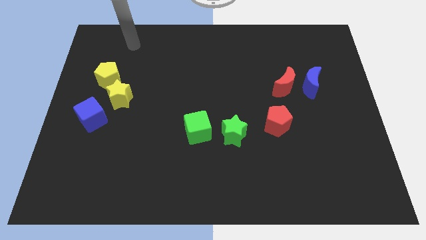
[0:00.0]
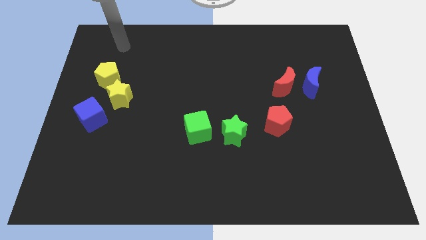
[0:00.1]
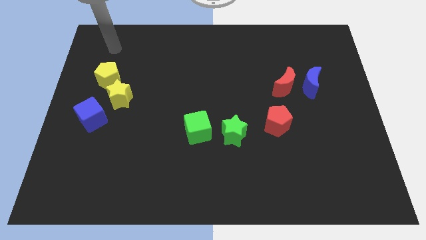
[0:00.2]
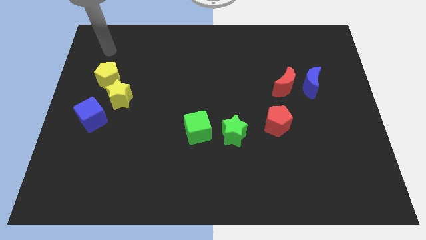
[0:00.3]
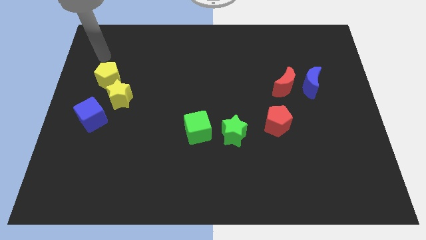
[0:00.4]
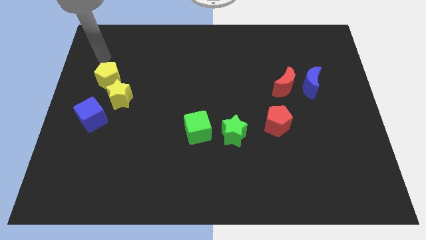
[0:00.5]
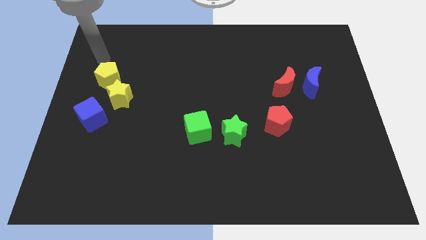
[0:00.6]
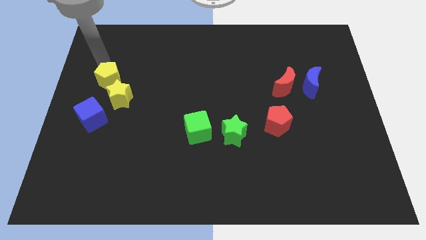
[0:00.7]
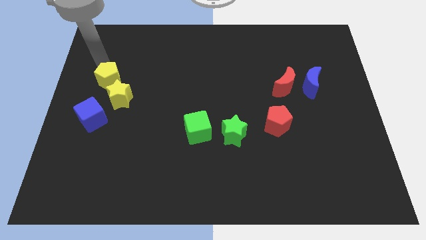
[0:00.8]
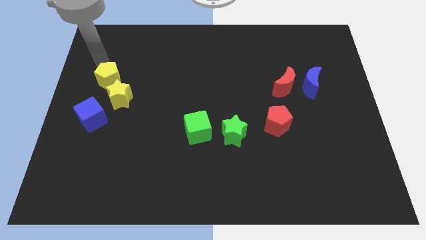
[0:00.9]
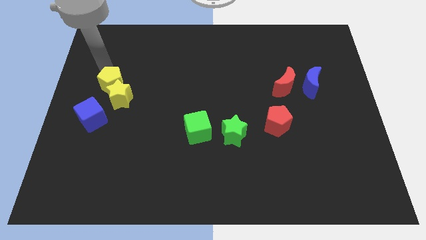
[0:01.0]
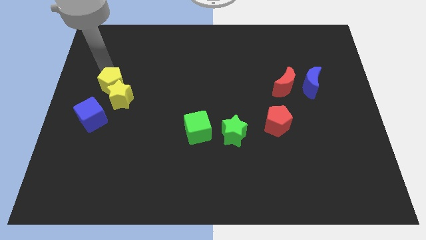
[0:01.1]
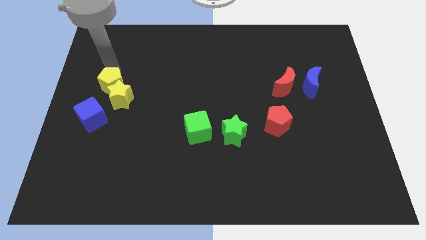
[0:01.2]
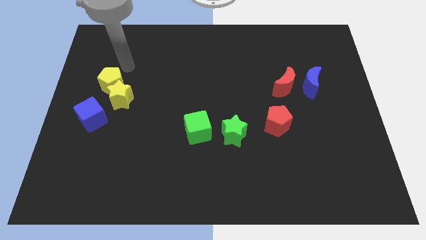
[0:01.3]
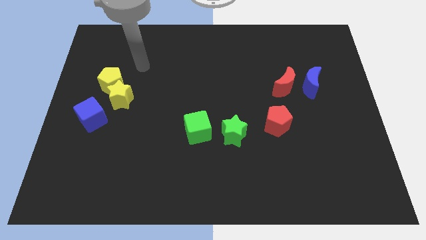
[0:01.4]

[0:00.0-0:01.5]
tap the yellow pentagon slightly downwards

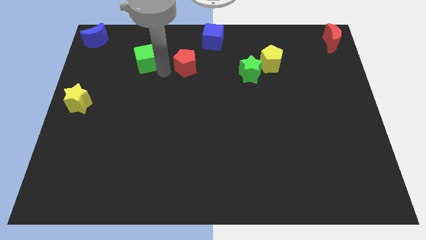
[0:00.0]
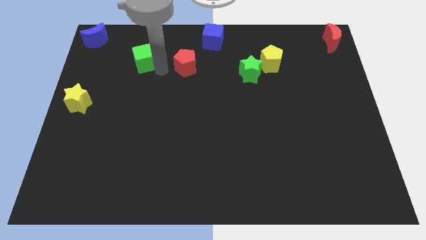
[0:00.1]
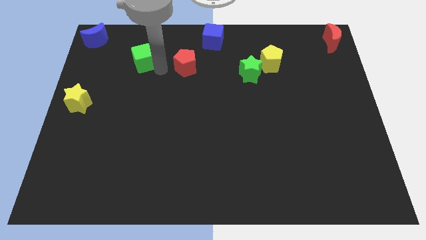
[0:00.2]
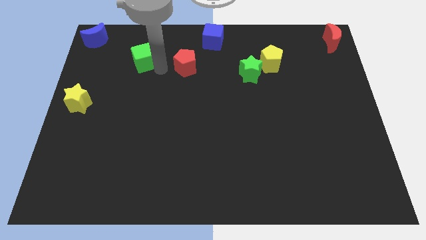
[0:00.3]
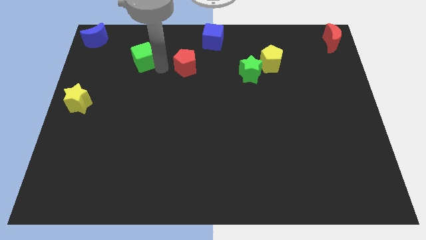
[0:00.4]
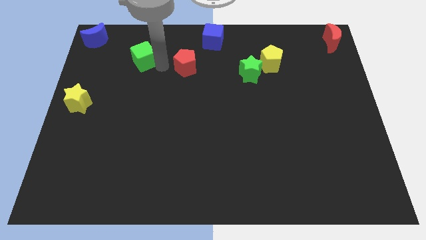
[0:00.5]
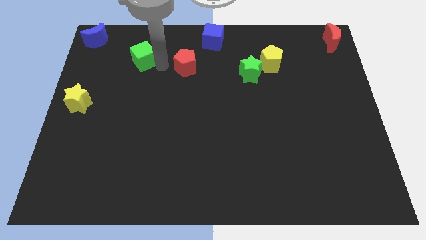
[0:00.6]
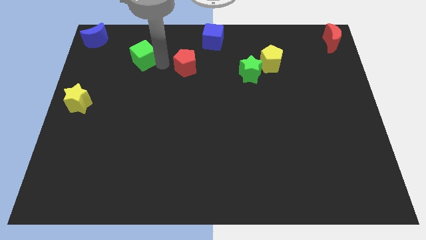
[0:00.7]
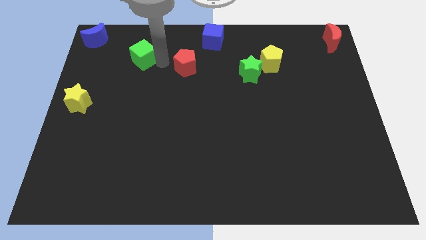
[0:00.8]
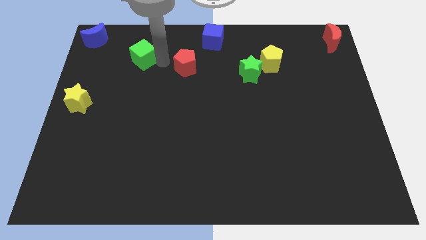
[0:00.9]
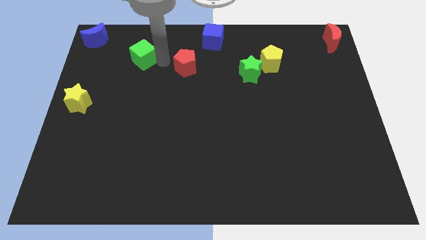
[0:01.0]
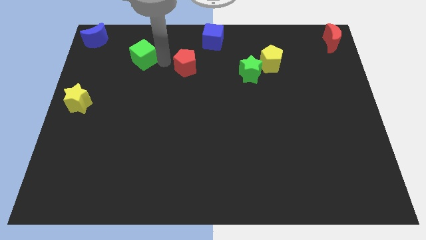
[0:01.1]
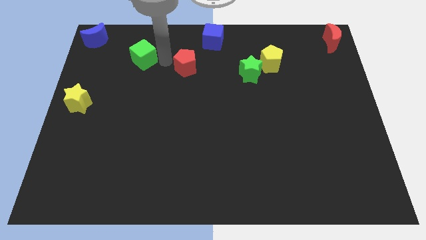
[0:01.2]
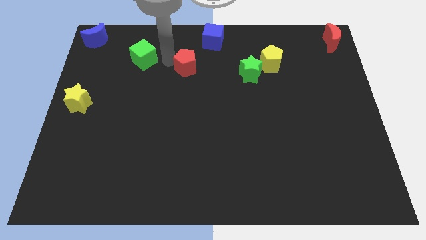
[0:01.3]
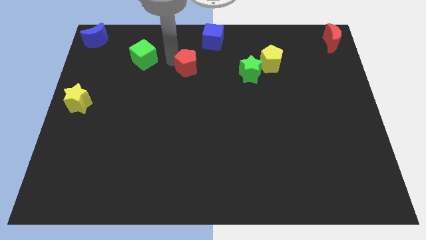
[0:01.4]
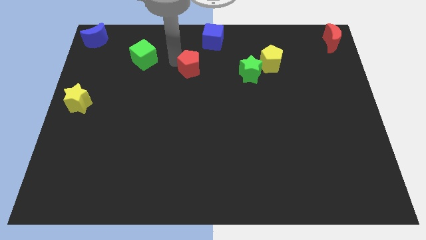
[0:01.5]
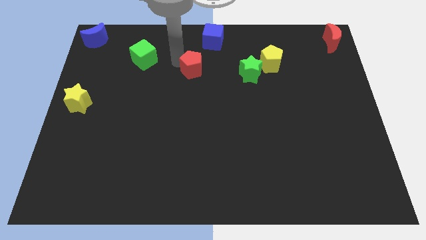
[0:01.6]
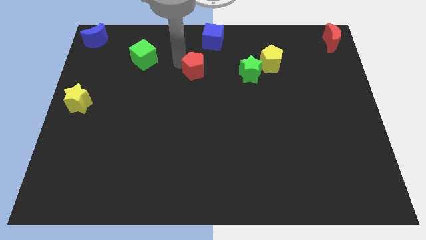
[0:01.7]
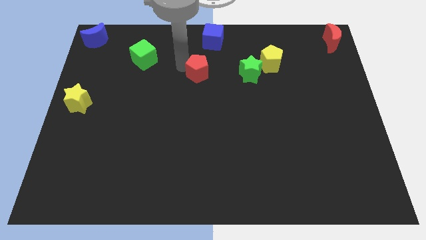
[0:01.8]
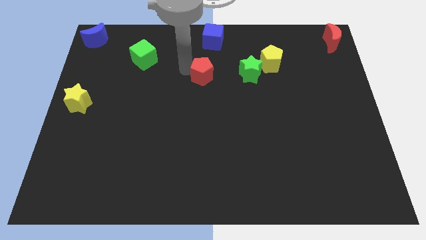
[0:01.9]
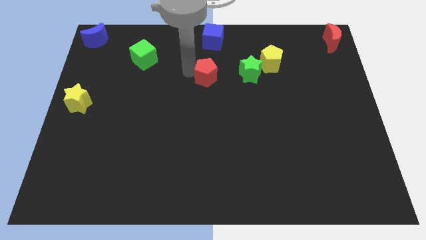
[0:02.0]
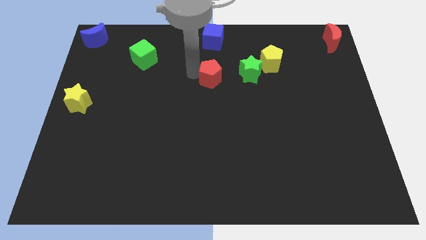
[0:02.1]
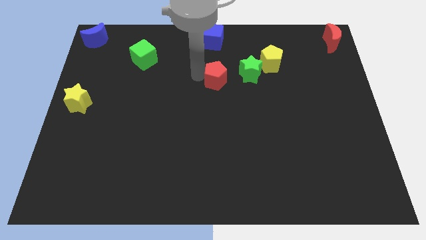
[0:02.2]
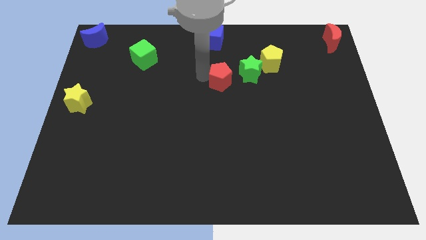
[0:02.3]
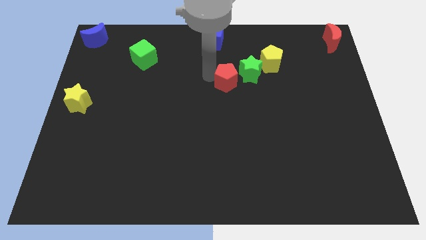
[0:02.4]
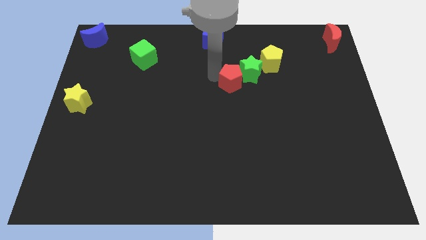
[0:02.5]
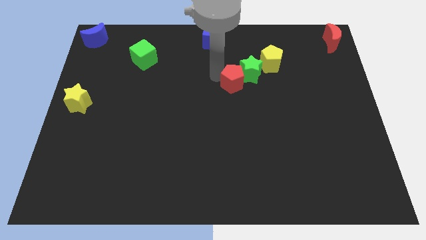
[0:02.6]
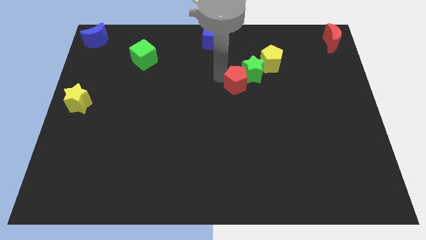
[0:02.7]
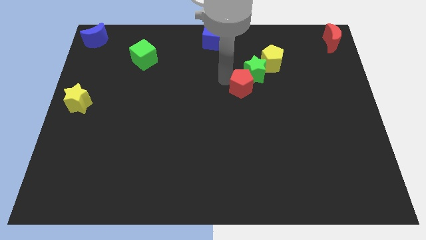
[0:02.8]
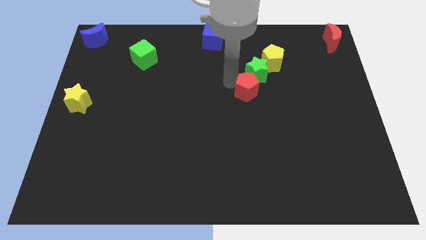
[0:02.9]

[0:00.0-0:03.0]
slide the red pentagon into the bottom left of the green star

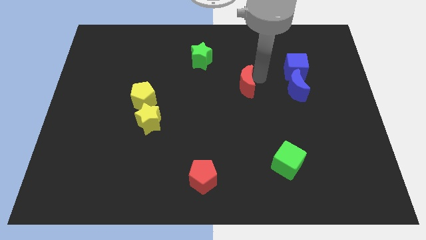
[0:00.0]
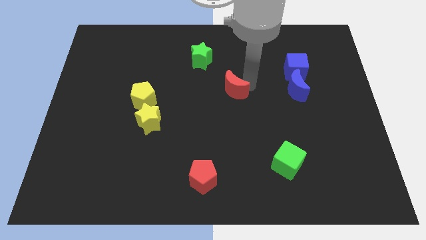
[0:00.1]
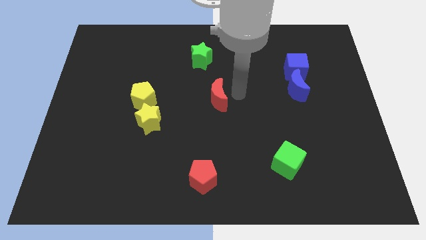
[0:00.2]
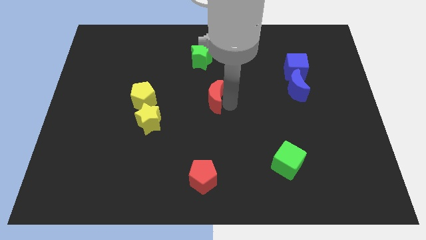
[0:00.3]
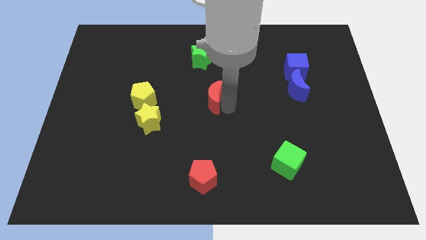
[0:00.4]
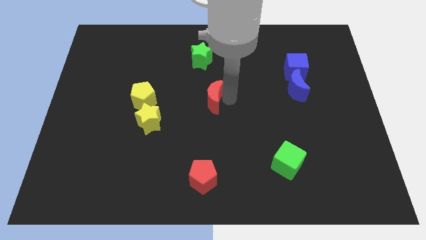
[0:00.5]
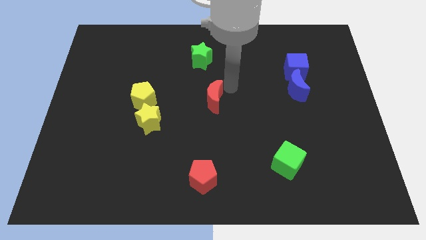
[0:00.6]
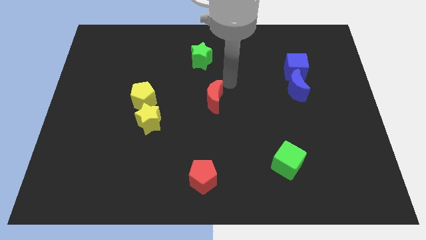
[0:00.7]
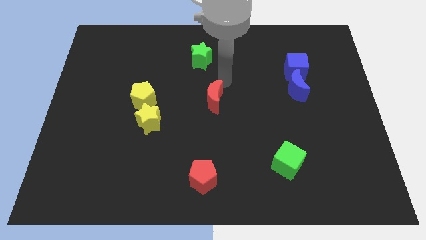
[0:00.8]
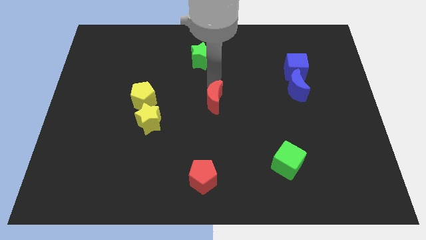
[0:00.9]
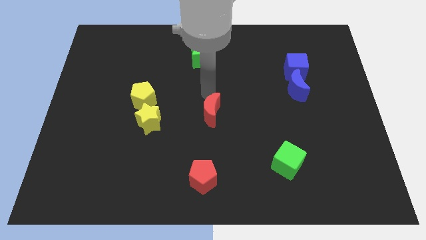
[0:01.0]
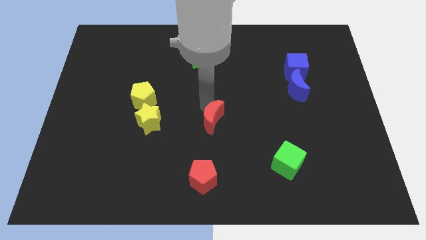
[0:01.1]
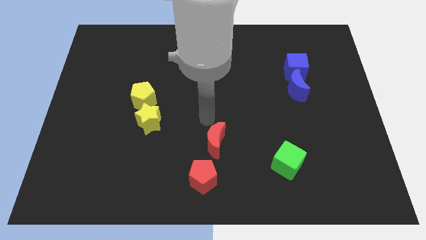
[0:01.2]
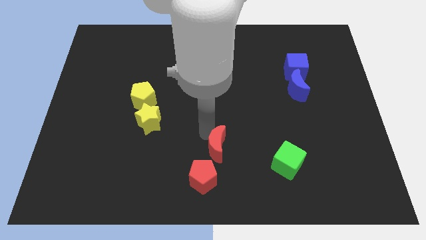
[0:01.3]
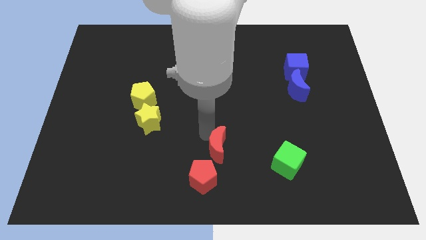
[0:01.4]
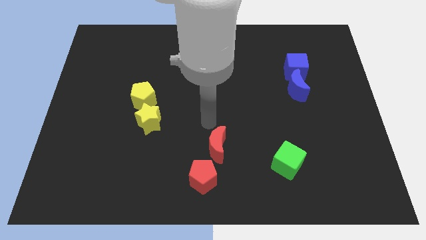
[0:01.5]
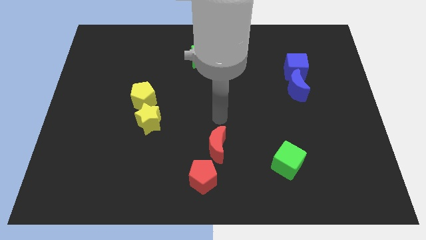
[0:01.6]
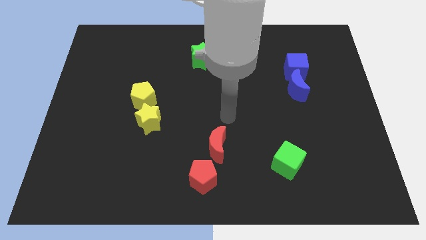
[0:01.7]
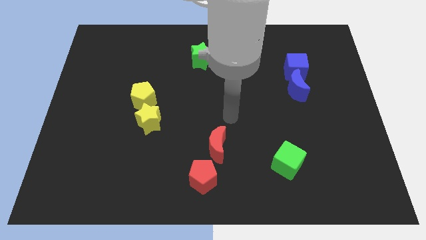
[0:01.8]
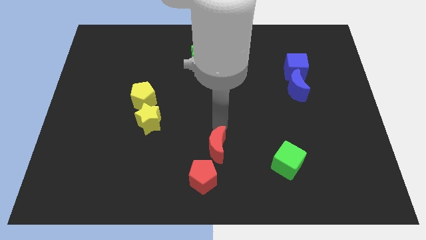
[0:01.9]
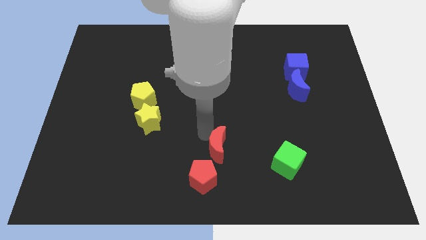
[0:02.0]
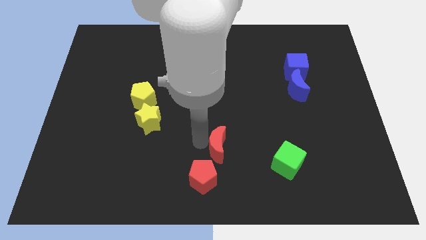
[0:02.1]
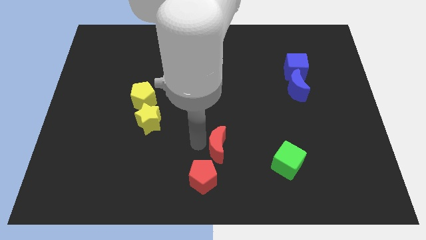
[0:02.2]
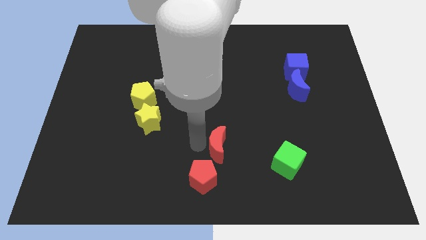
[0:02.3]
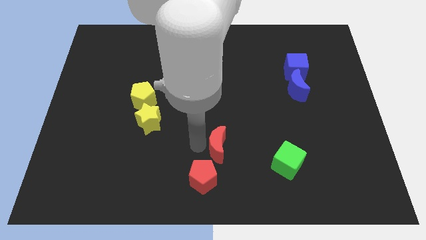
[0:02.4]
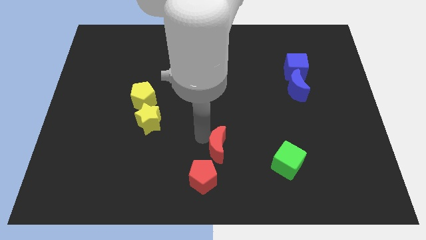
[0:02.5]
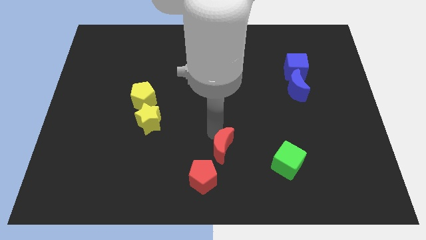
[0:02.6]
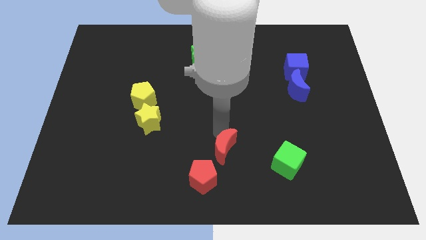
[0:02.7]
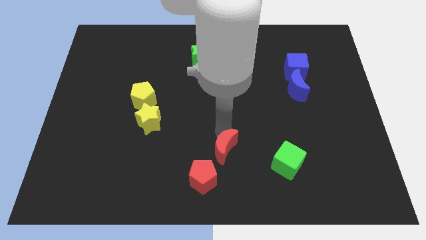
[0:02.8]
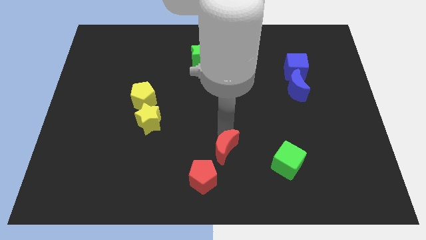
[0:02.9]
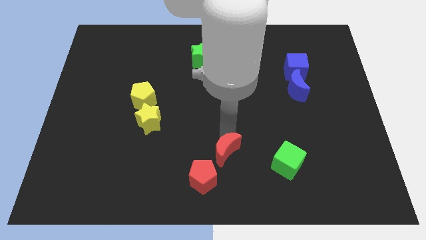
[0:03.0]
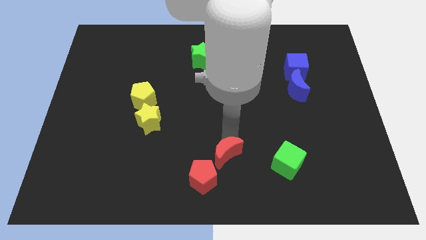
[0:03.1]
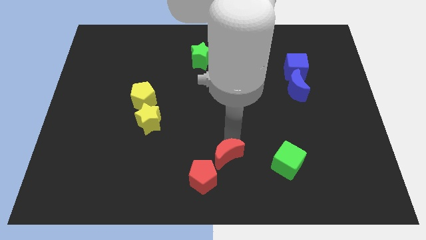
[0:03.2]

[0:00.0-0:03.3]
push the red moon to the top right side of the red pentagon

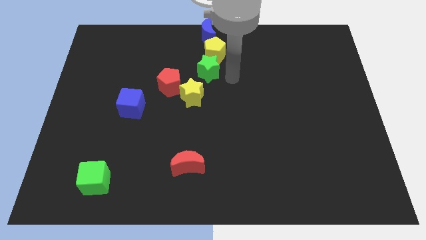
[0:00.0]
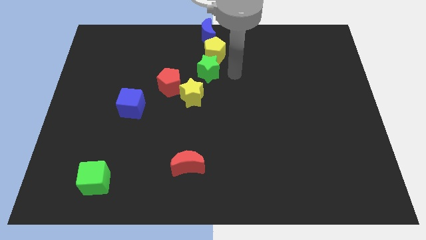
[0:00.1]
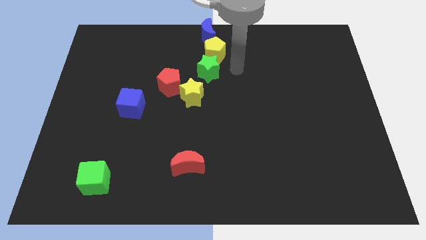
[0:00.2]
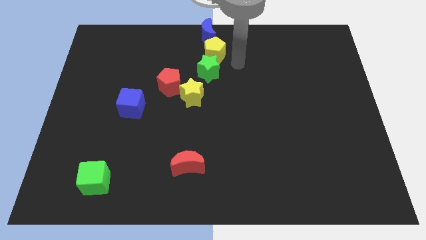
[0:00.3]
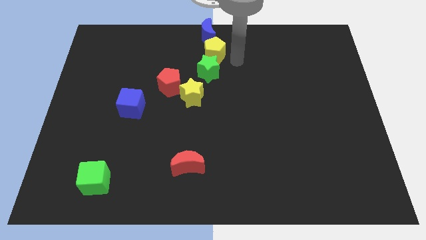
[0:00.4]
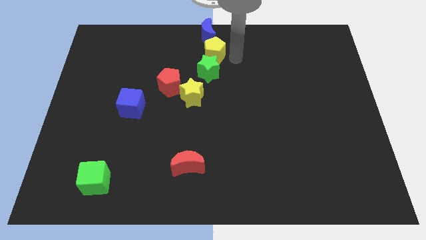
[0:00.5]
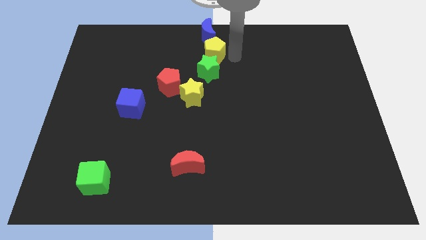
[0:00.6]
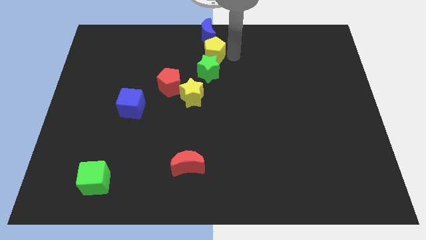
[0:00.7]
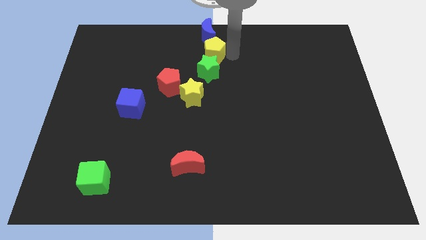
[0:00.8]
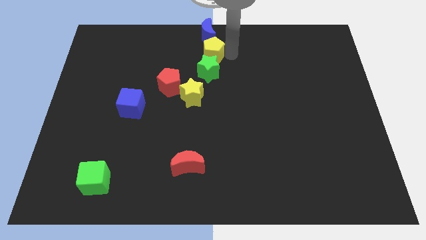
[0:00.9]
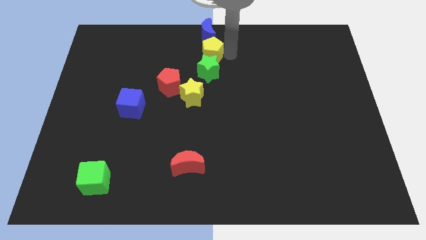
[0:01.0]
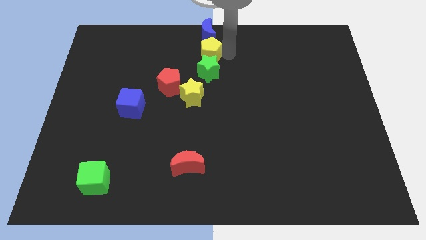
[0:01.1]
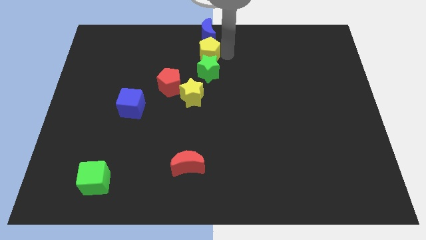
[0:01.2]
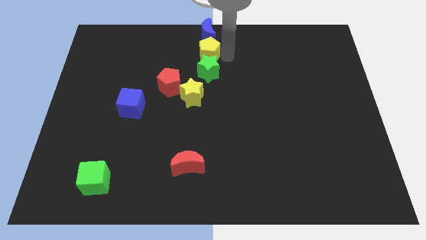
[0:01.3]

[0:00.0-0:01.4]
adjust the yellow pentagon in between the blue crescent and the green star horizontally
